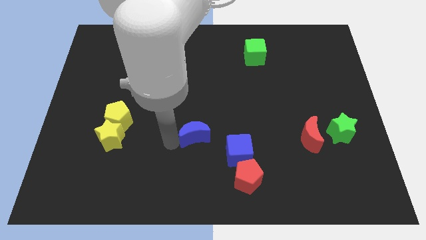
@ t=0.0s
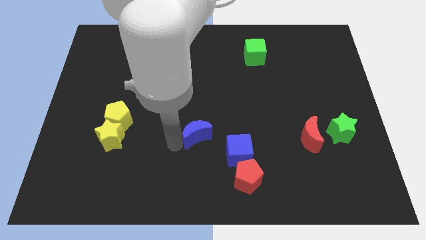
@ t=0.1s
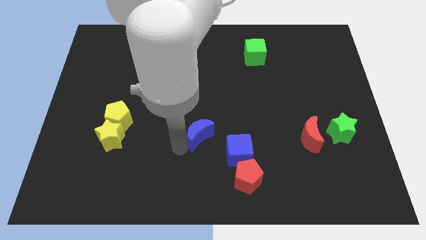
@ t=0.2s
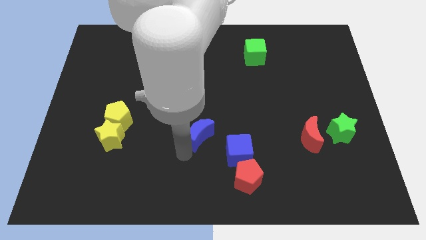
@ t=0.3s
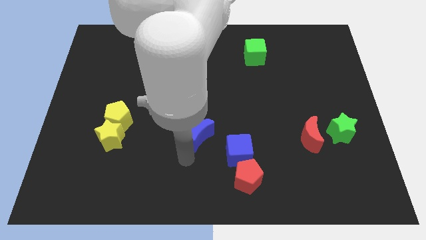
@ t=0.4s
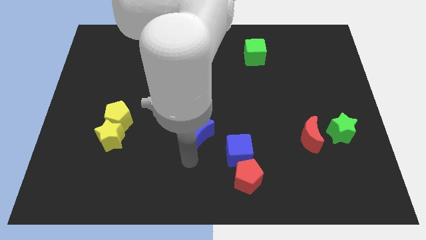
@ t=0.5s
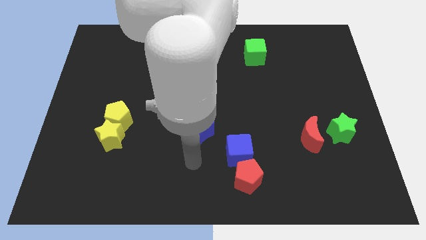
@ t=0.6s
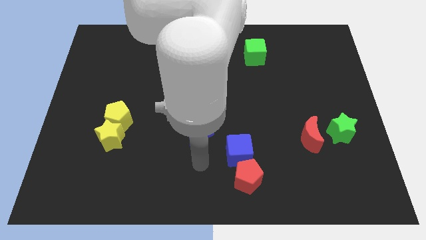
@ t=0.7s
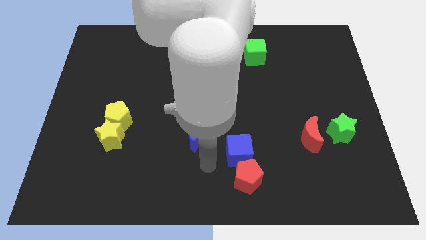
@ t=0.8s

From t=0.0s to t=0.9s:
slightly turn the blue crescent to the right of the board

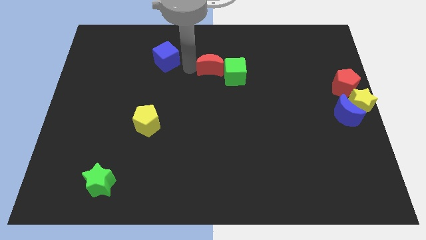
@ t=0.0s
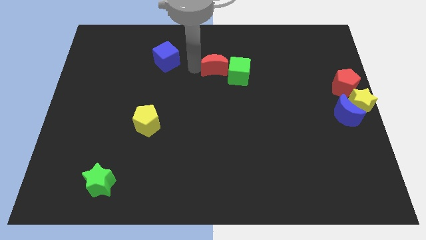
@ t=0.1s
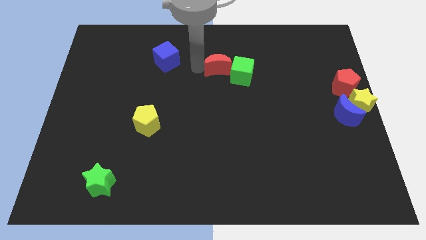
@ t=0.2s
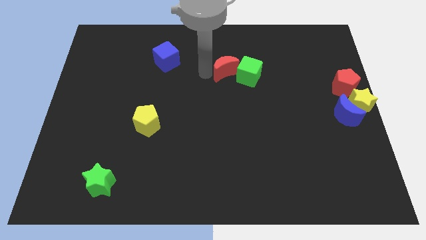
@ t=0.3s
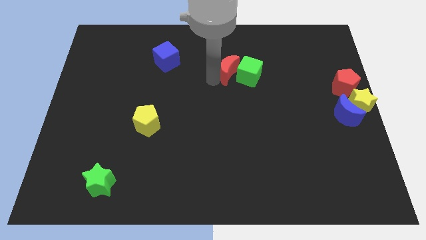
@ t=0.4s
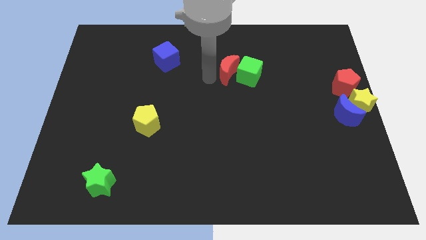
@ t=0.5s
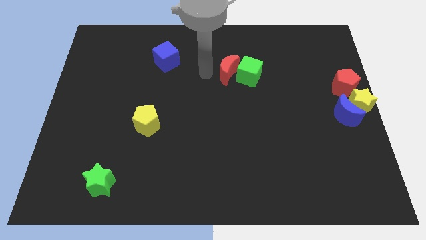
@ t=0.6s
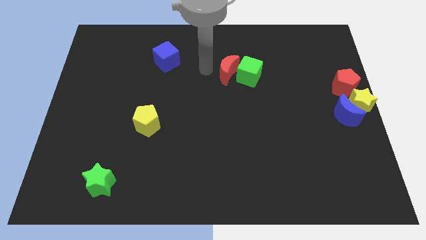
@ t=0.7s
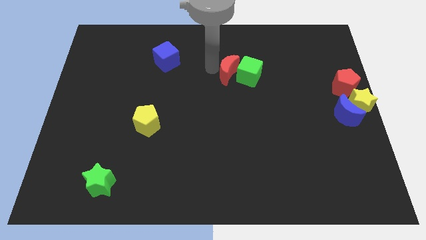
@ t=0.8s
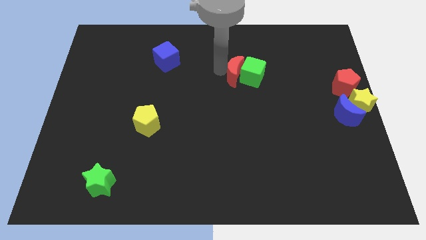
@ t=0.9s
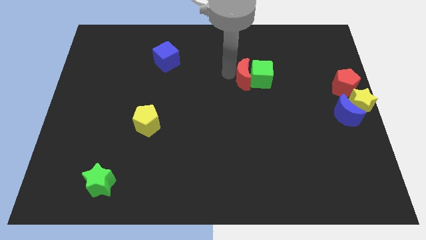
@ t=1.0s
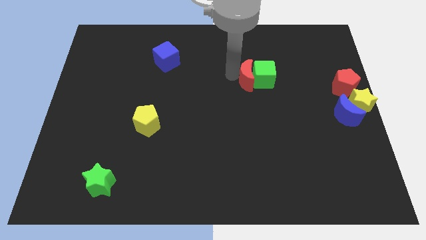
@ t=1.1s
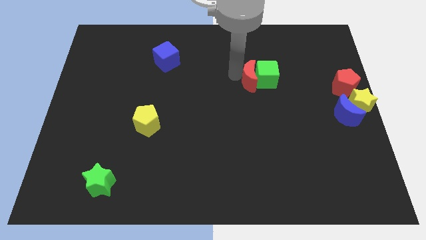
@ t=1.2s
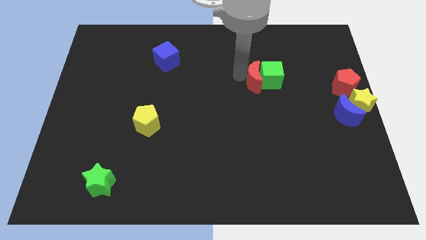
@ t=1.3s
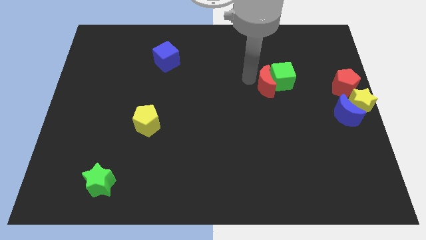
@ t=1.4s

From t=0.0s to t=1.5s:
move green cube and red moon slightly right

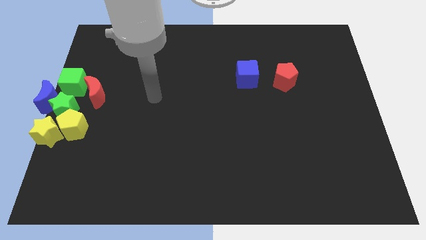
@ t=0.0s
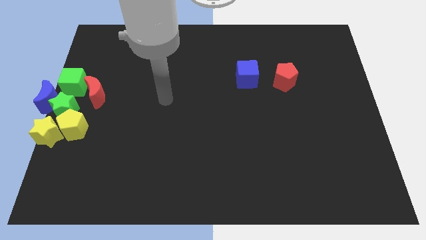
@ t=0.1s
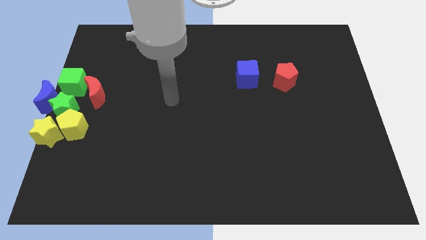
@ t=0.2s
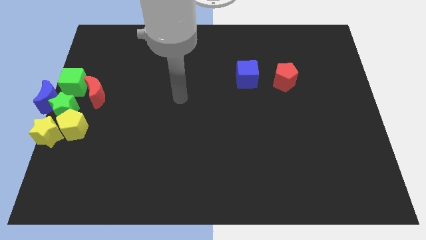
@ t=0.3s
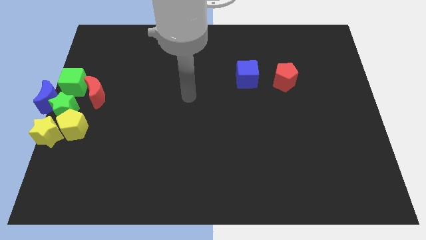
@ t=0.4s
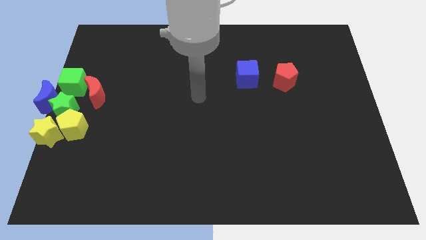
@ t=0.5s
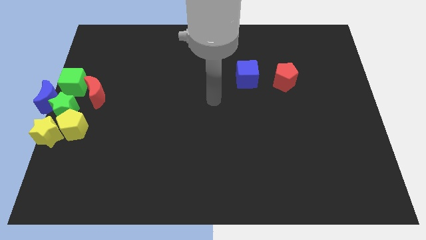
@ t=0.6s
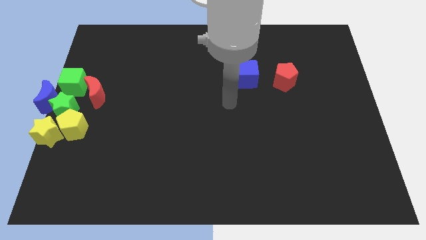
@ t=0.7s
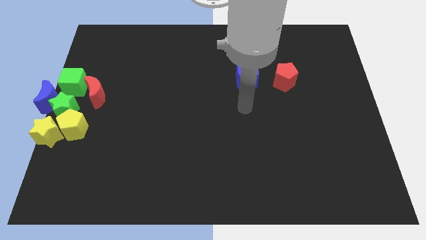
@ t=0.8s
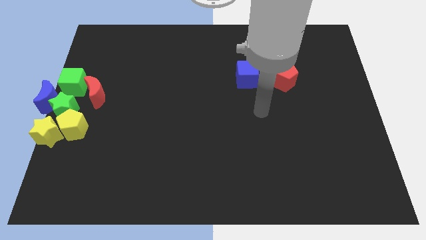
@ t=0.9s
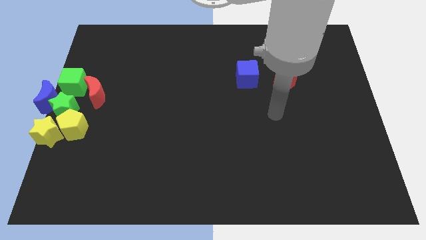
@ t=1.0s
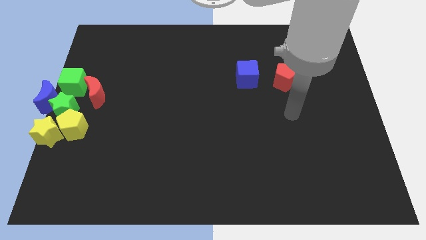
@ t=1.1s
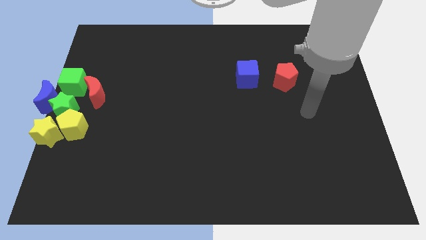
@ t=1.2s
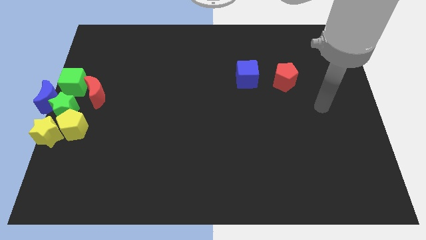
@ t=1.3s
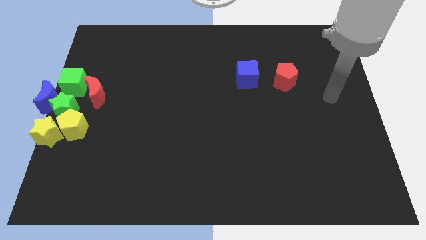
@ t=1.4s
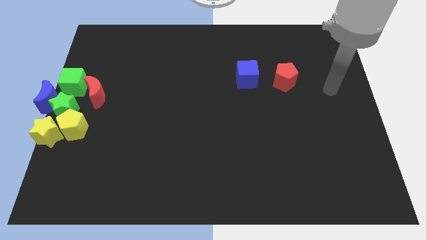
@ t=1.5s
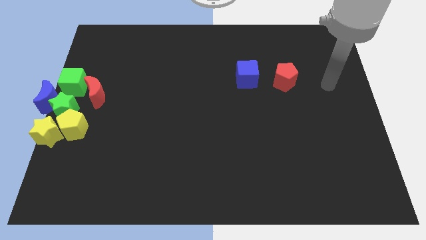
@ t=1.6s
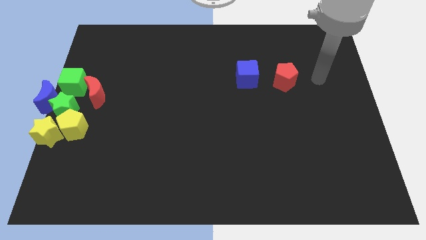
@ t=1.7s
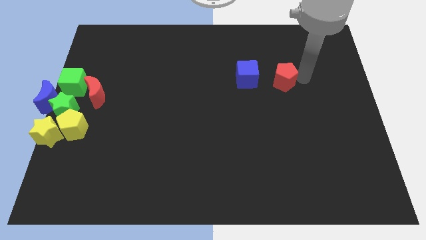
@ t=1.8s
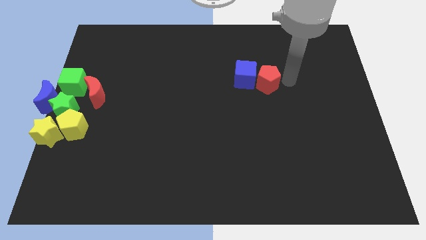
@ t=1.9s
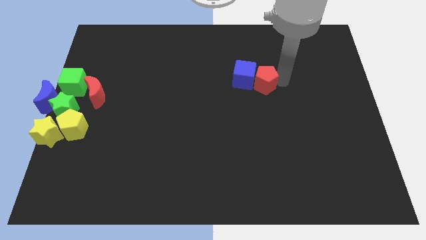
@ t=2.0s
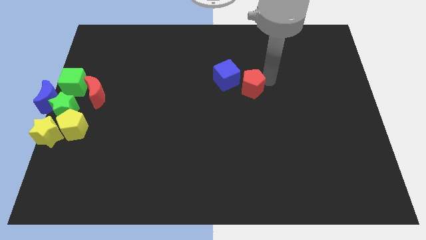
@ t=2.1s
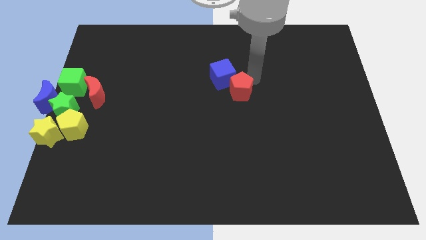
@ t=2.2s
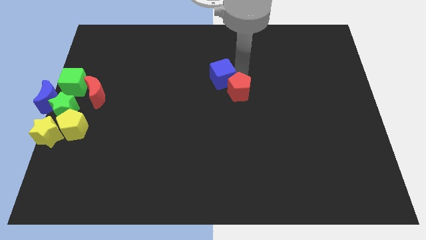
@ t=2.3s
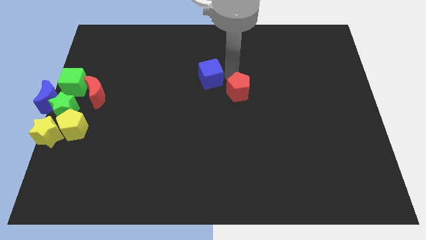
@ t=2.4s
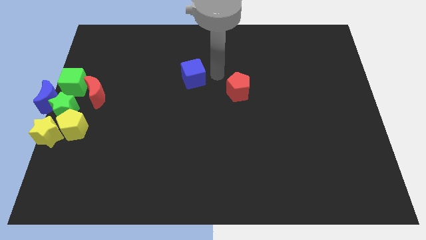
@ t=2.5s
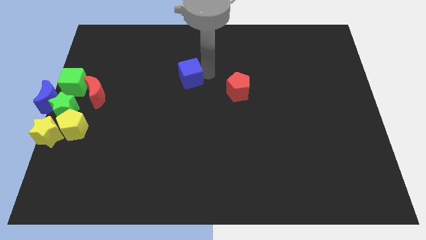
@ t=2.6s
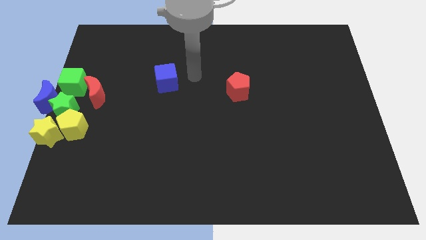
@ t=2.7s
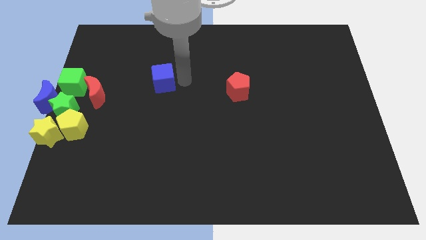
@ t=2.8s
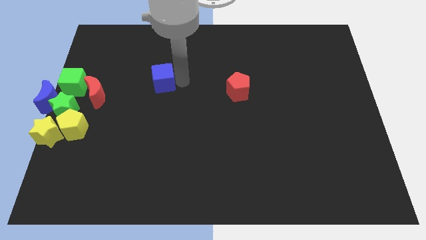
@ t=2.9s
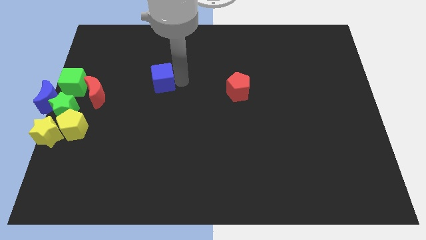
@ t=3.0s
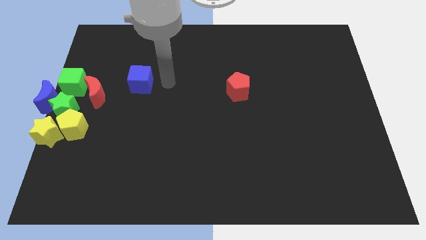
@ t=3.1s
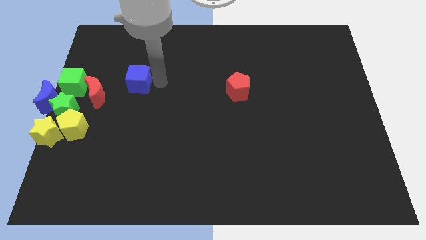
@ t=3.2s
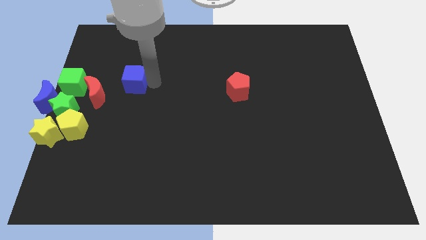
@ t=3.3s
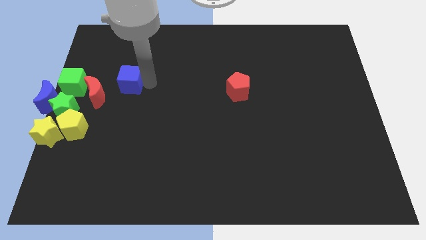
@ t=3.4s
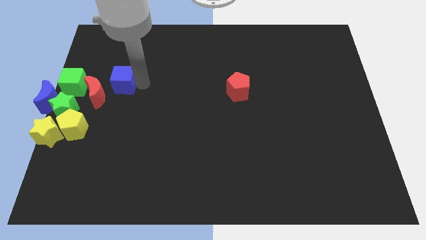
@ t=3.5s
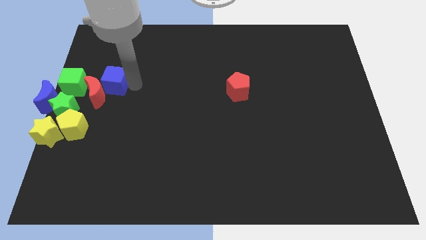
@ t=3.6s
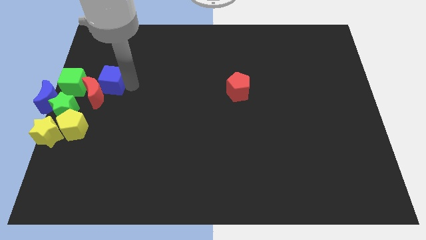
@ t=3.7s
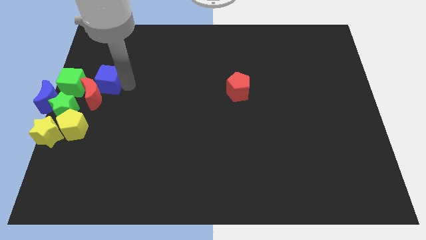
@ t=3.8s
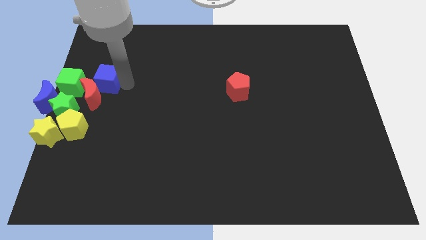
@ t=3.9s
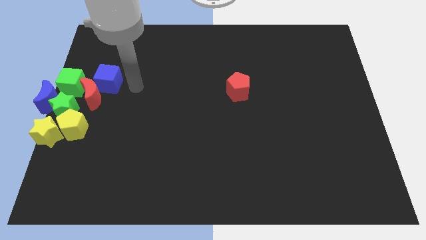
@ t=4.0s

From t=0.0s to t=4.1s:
push the blue cube to the right side of the red moon

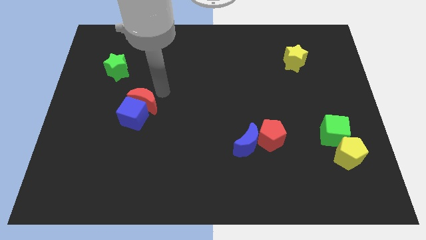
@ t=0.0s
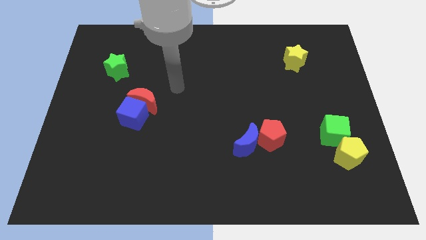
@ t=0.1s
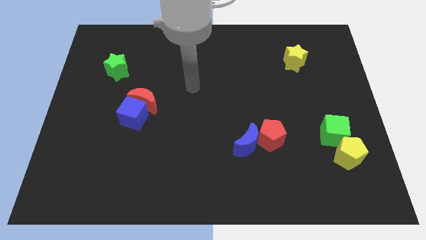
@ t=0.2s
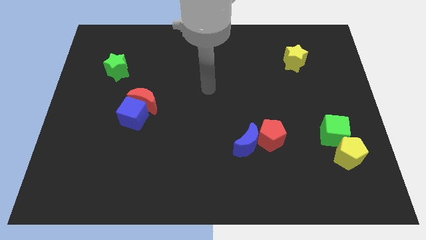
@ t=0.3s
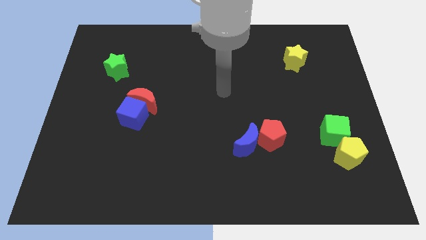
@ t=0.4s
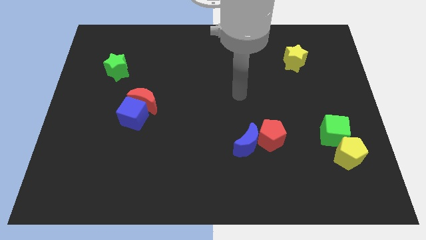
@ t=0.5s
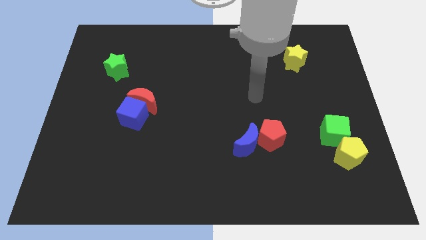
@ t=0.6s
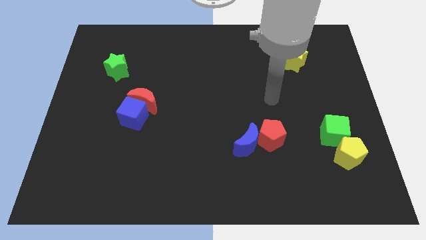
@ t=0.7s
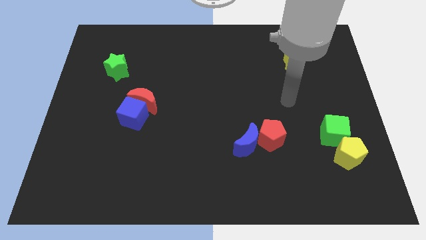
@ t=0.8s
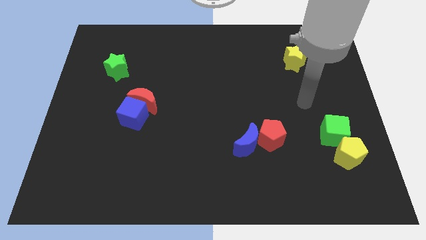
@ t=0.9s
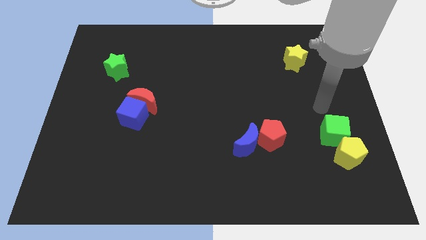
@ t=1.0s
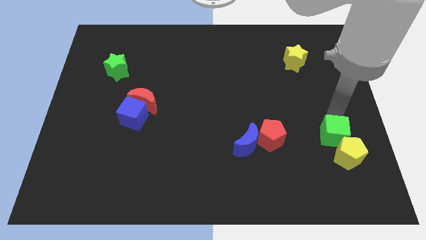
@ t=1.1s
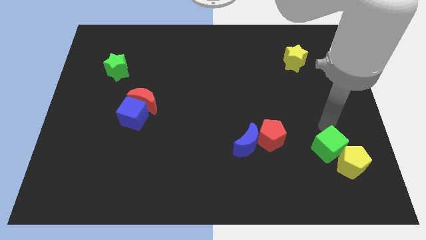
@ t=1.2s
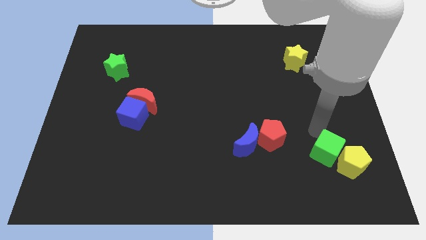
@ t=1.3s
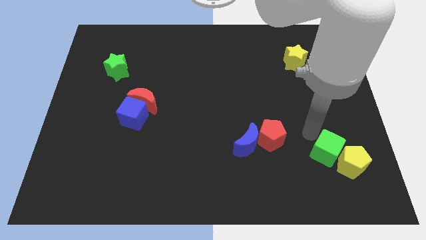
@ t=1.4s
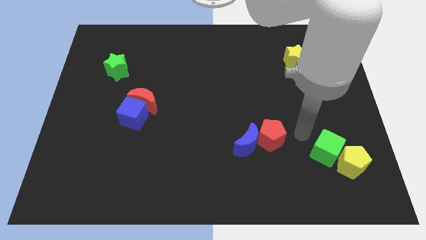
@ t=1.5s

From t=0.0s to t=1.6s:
tap green cube along with yellow pentagon

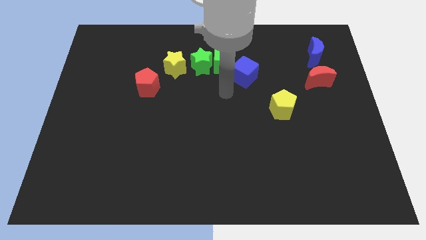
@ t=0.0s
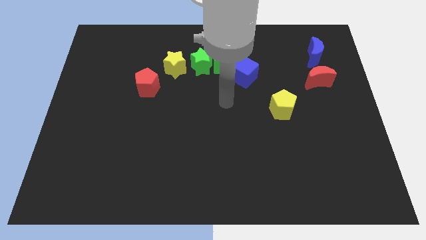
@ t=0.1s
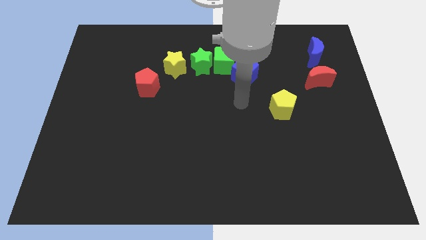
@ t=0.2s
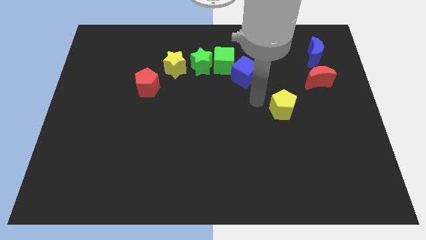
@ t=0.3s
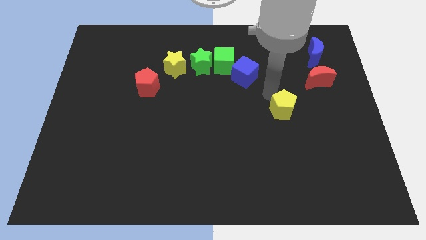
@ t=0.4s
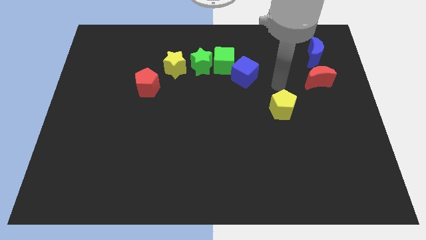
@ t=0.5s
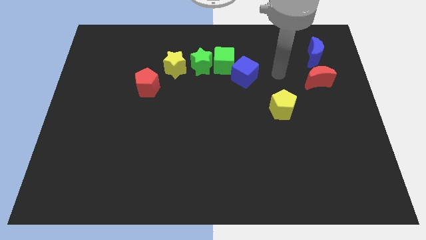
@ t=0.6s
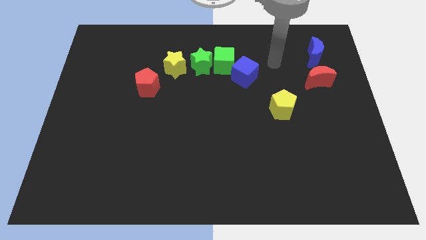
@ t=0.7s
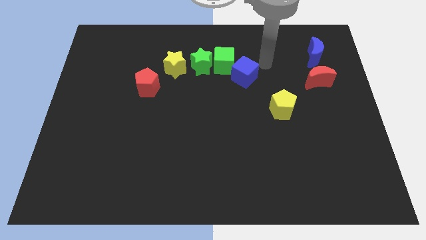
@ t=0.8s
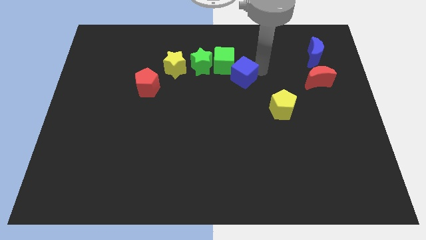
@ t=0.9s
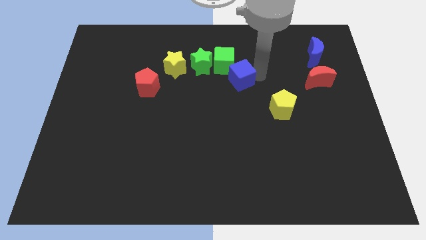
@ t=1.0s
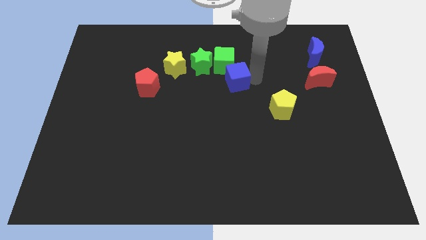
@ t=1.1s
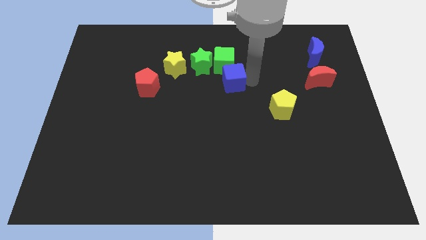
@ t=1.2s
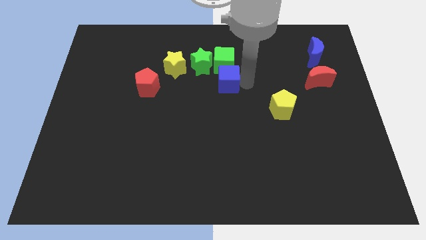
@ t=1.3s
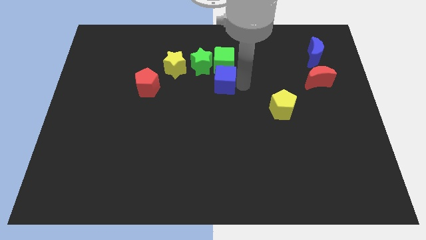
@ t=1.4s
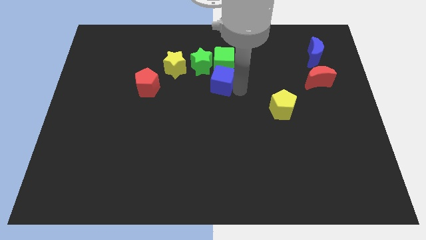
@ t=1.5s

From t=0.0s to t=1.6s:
place the blue cube below the green cube
